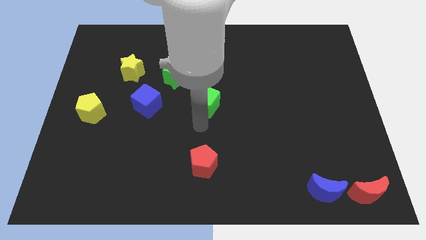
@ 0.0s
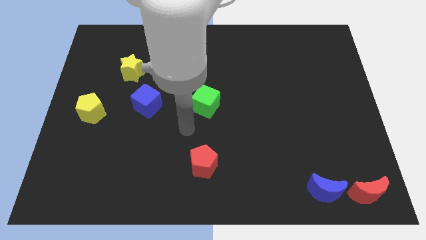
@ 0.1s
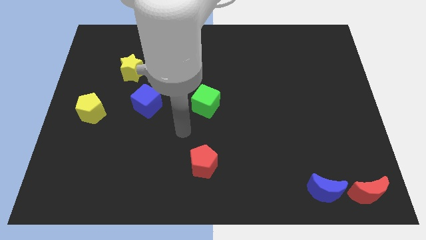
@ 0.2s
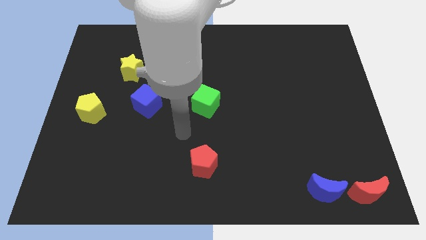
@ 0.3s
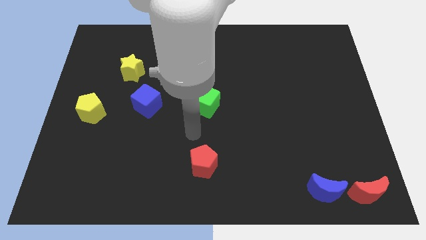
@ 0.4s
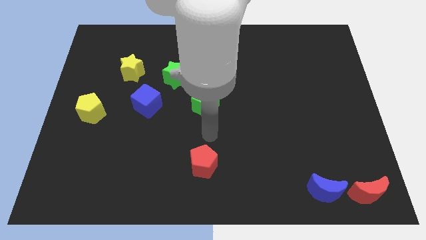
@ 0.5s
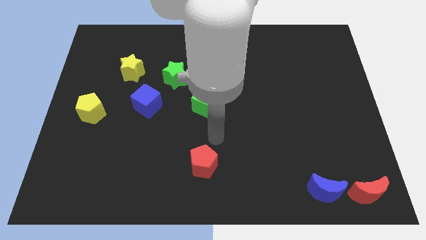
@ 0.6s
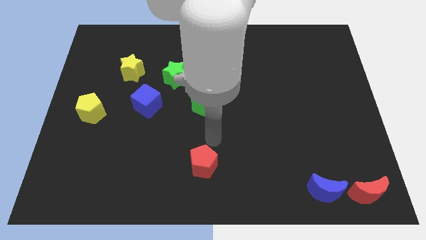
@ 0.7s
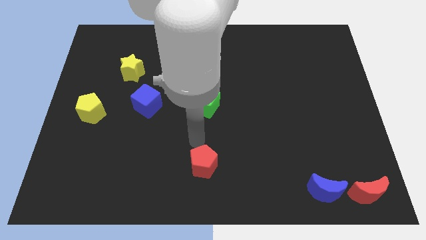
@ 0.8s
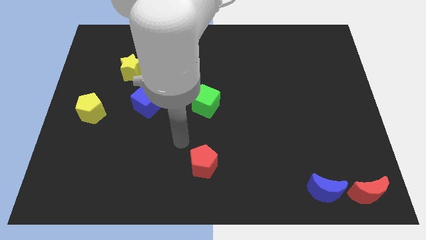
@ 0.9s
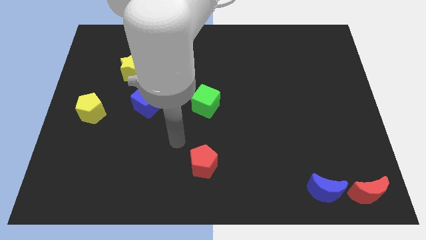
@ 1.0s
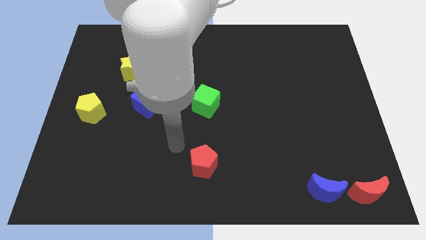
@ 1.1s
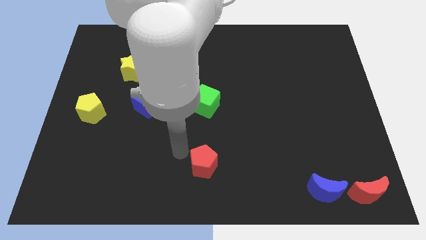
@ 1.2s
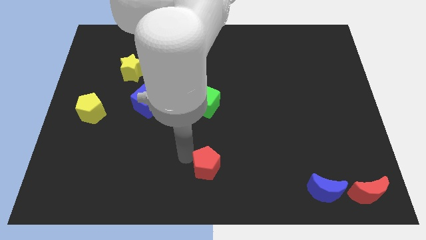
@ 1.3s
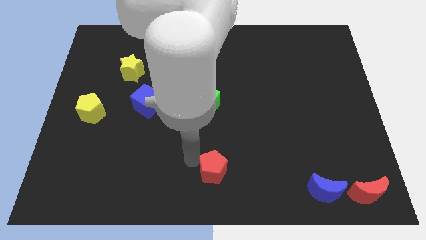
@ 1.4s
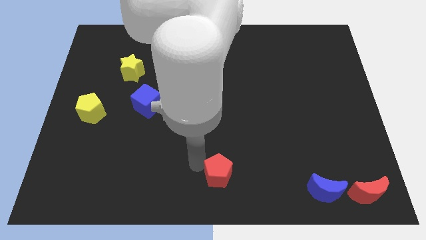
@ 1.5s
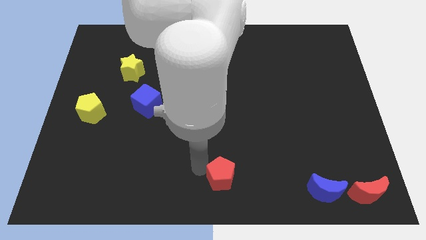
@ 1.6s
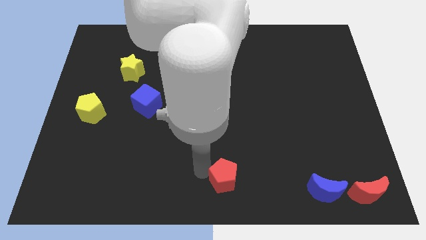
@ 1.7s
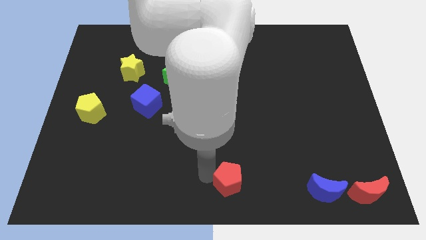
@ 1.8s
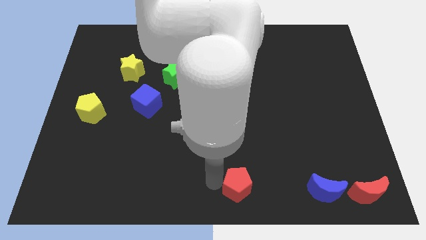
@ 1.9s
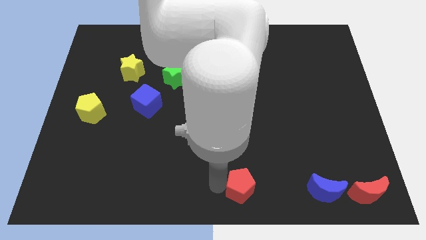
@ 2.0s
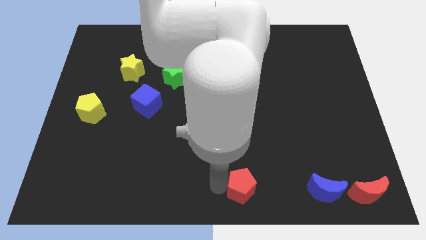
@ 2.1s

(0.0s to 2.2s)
slide the red pentagon slightly to the right

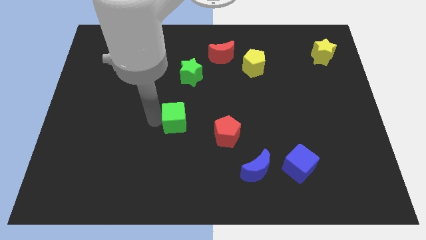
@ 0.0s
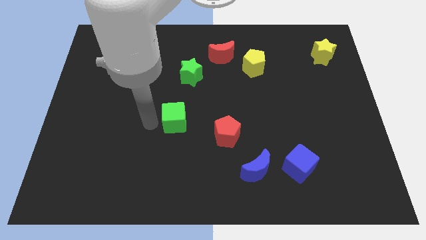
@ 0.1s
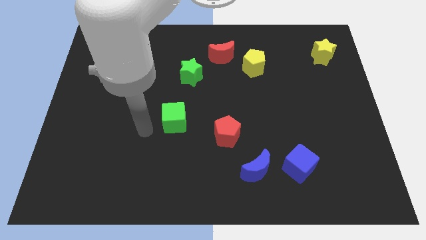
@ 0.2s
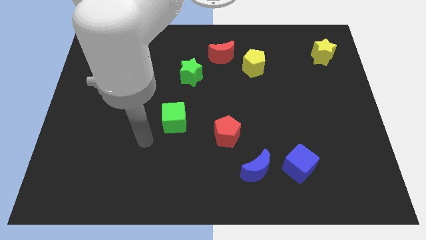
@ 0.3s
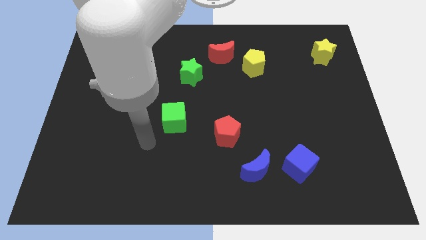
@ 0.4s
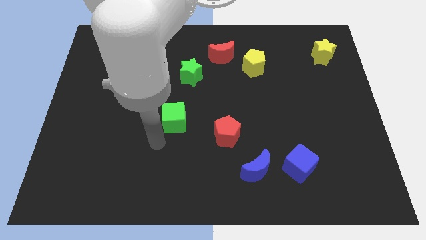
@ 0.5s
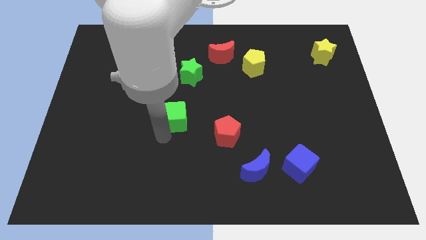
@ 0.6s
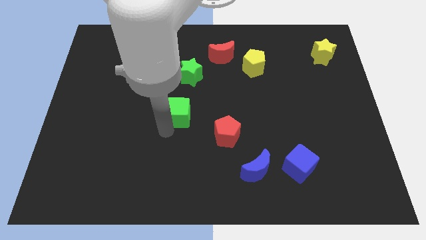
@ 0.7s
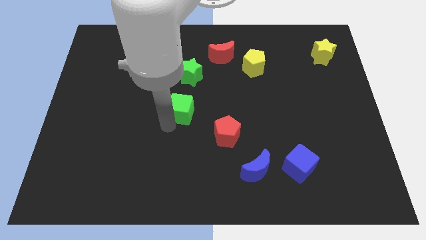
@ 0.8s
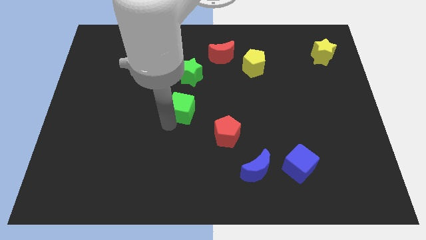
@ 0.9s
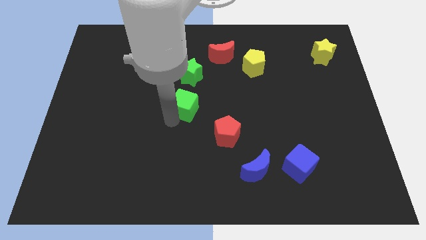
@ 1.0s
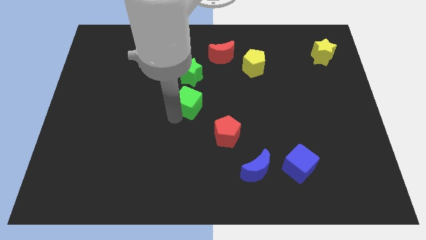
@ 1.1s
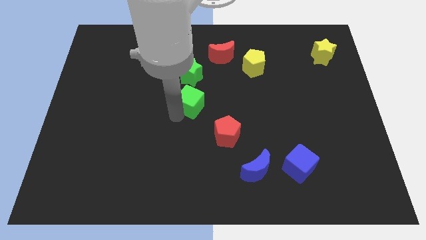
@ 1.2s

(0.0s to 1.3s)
place the green cube to the bottom side of the green star

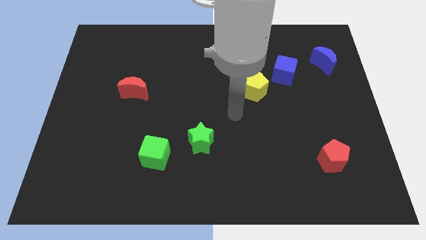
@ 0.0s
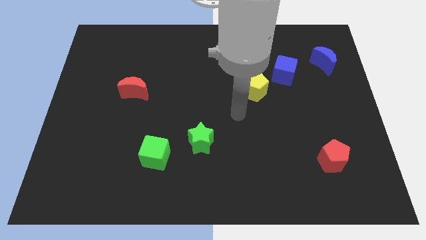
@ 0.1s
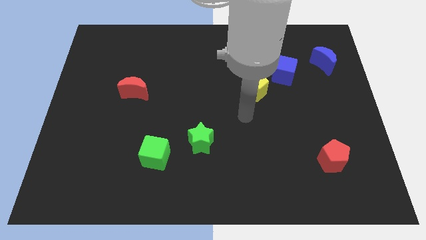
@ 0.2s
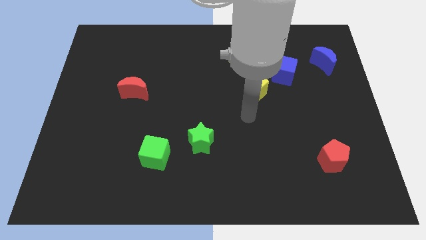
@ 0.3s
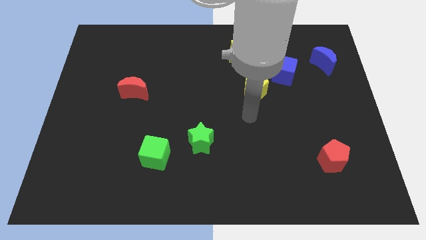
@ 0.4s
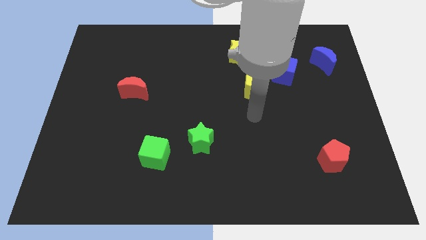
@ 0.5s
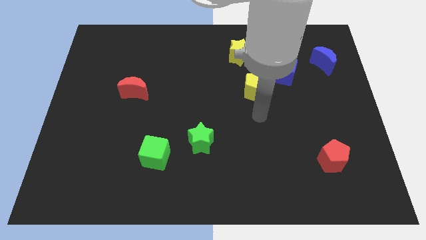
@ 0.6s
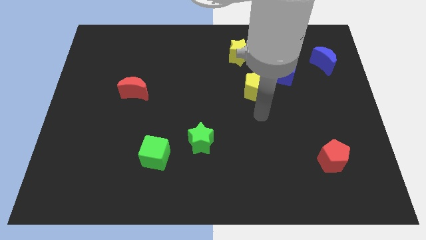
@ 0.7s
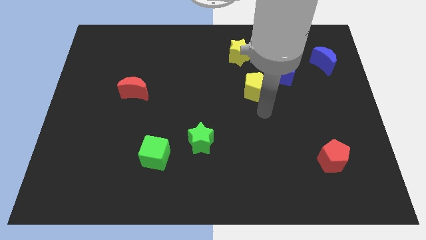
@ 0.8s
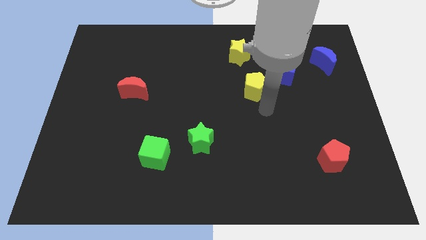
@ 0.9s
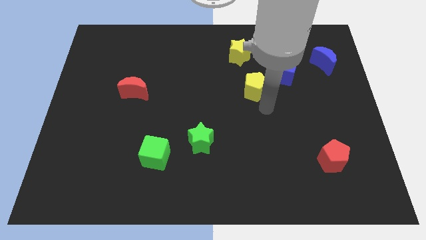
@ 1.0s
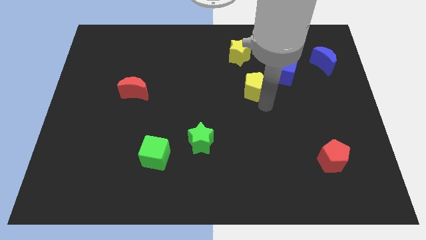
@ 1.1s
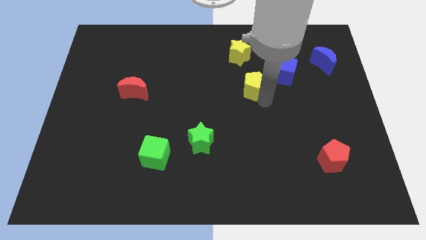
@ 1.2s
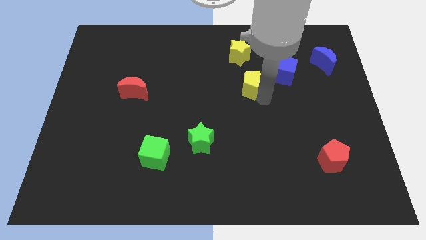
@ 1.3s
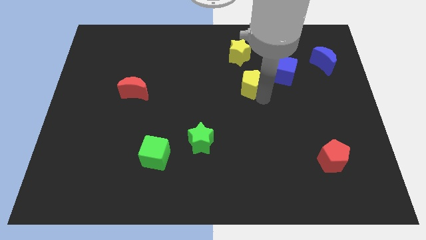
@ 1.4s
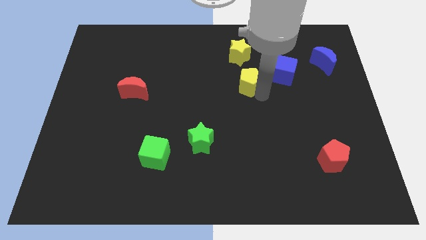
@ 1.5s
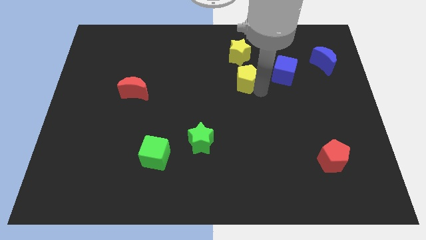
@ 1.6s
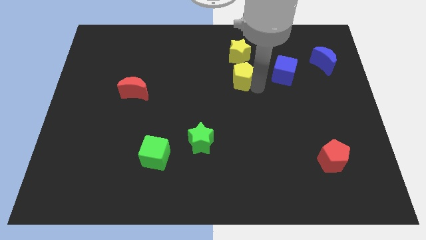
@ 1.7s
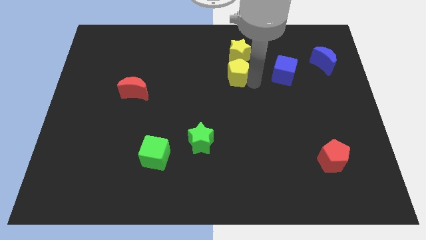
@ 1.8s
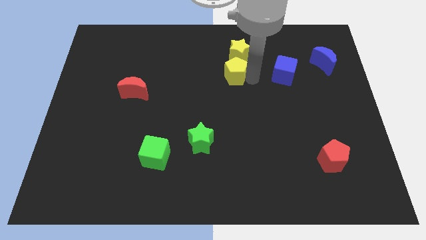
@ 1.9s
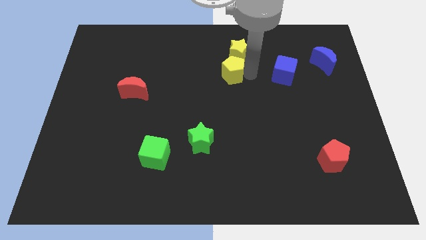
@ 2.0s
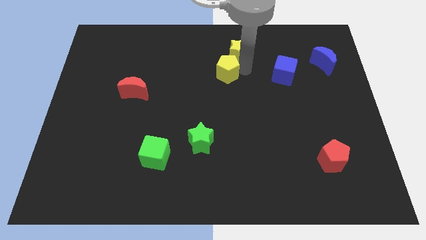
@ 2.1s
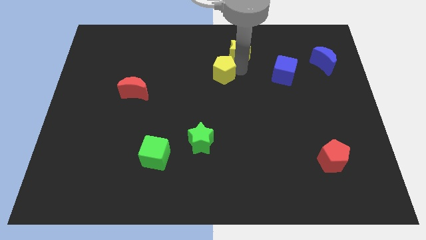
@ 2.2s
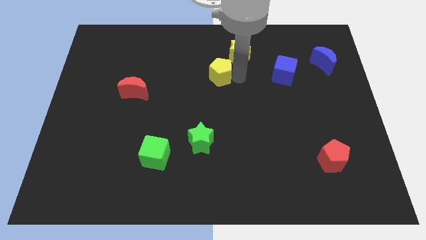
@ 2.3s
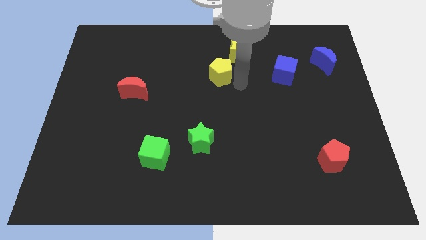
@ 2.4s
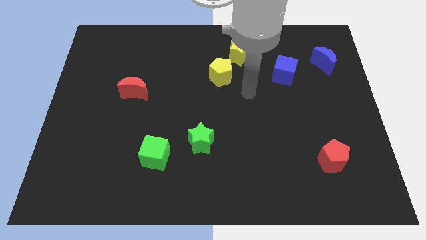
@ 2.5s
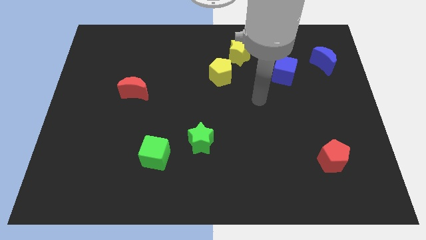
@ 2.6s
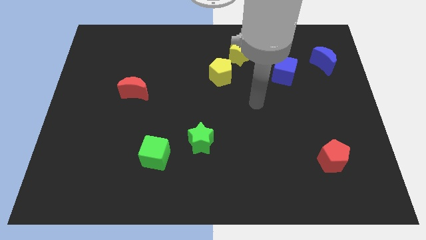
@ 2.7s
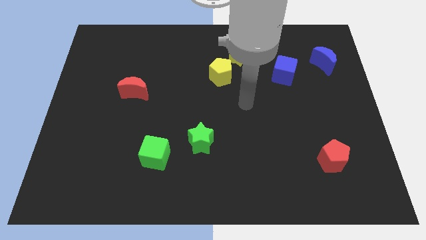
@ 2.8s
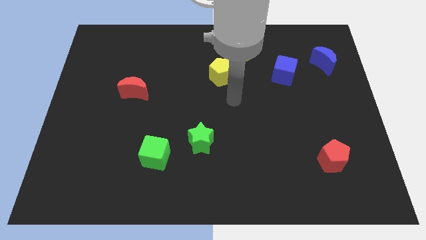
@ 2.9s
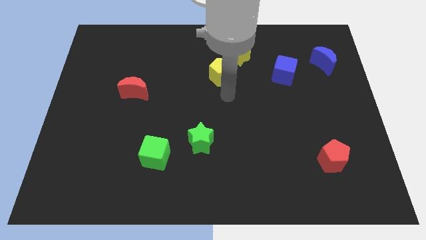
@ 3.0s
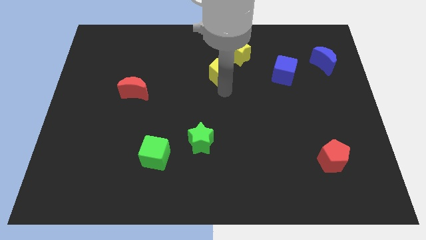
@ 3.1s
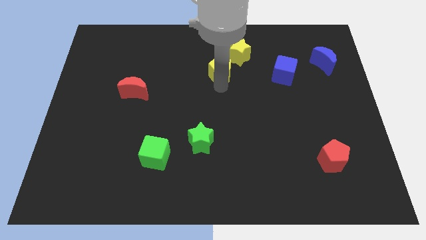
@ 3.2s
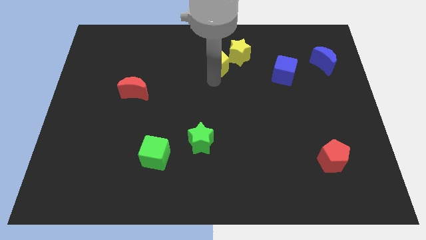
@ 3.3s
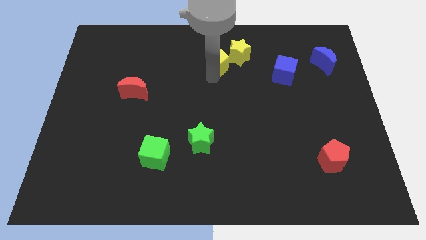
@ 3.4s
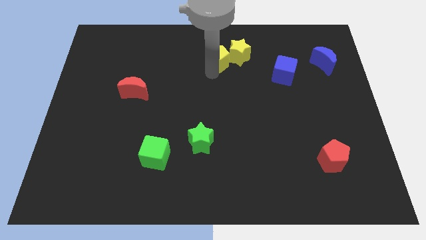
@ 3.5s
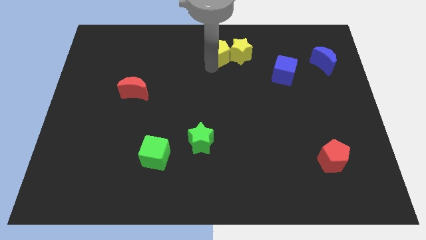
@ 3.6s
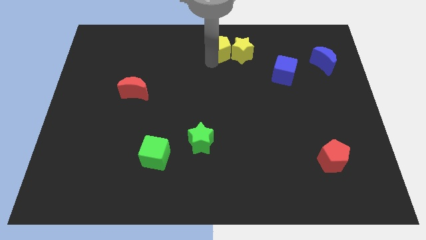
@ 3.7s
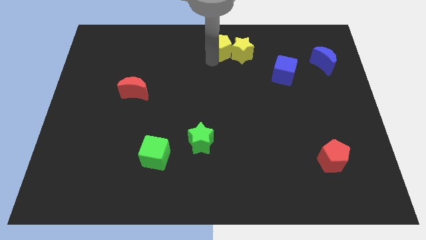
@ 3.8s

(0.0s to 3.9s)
move the yellow pentagon to the left of the yellow star

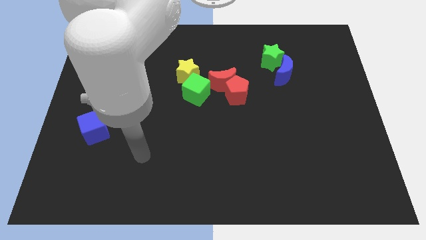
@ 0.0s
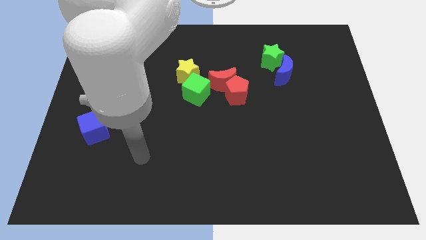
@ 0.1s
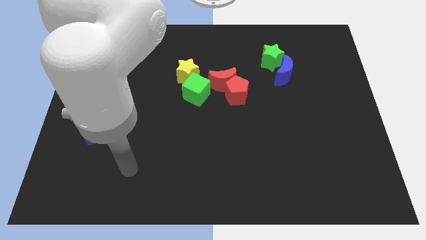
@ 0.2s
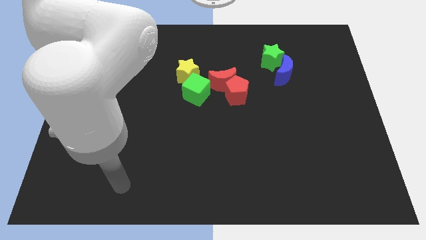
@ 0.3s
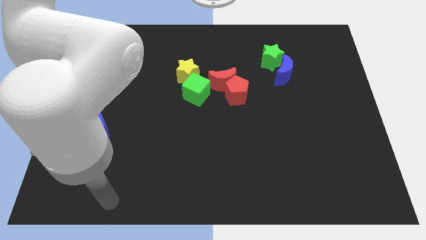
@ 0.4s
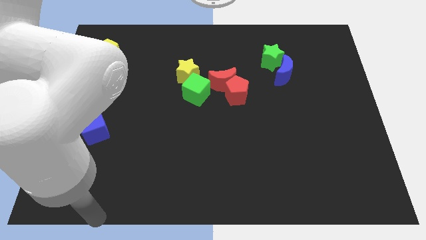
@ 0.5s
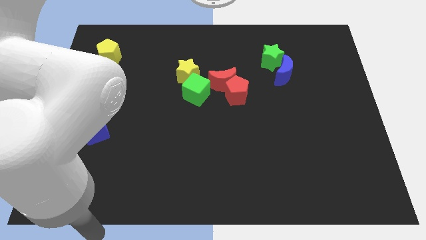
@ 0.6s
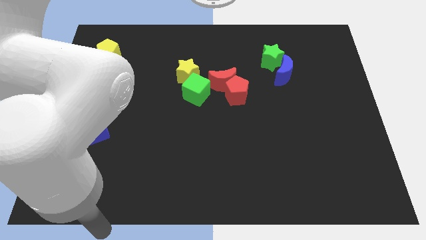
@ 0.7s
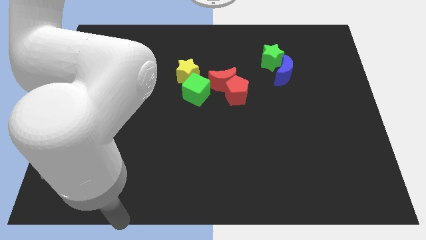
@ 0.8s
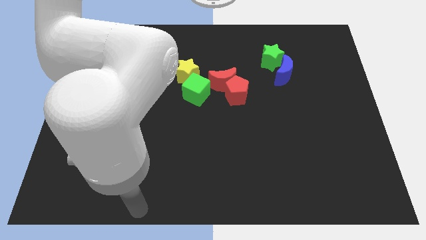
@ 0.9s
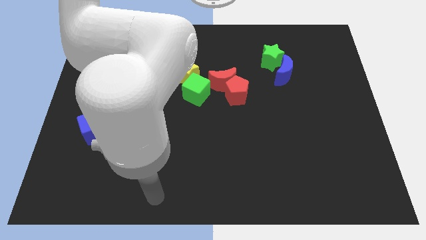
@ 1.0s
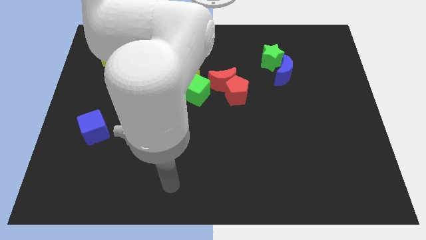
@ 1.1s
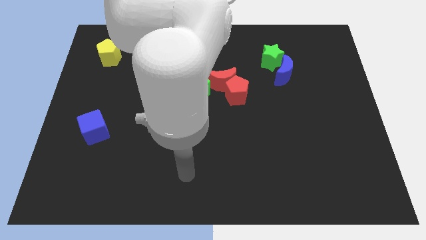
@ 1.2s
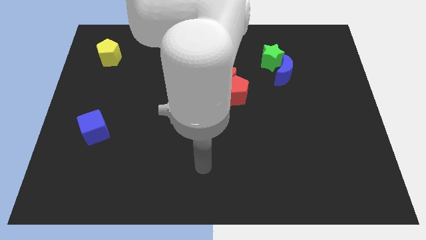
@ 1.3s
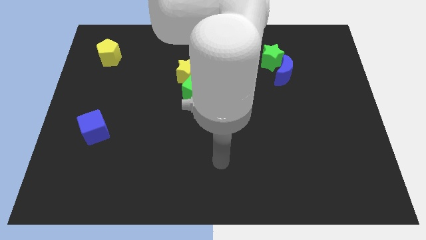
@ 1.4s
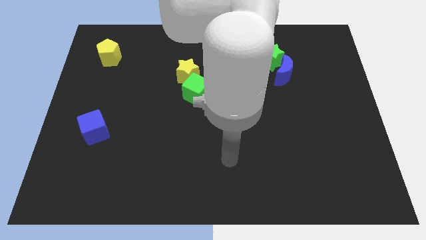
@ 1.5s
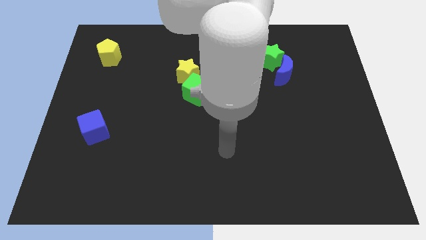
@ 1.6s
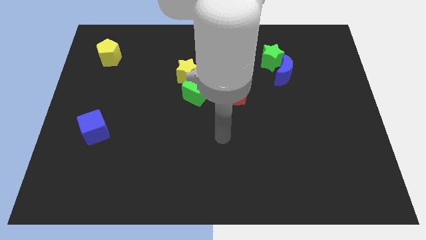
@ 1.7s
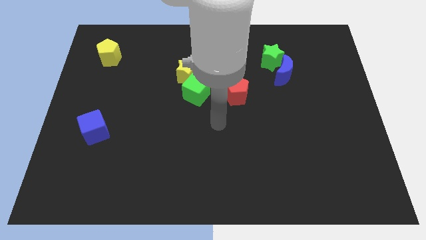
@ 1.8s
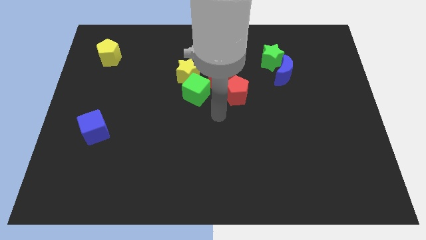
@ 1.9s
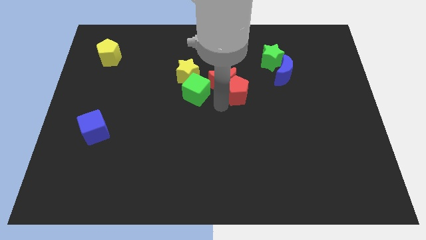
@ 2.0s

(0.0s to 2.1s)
move your arm to the center of the board
